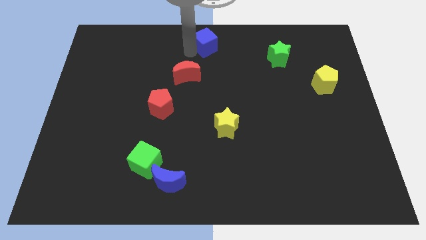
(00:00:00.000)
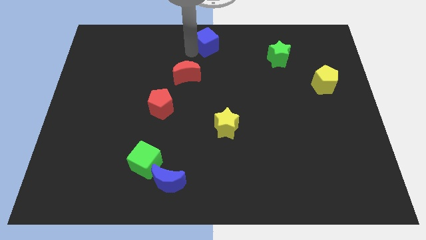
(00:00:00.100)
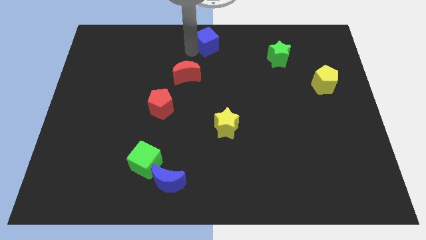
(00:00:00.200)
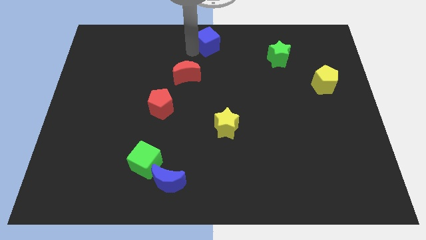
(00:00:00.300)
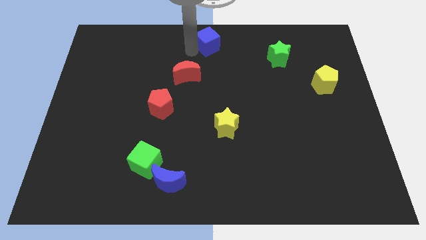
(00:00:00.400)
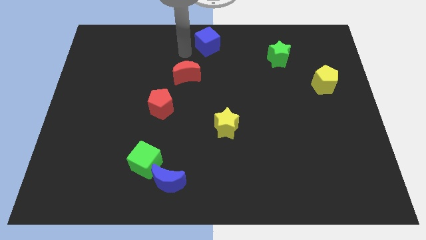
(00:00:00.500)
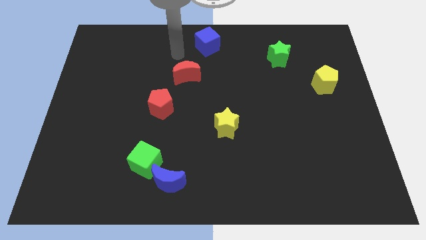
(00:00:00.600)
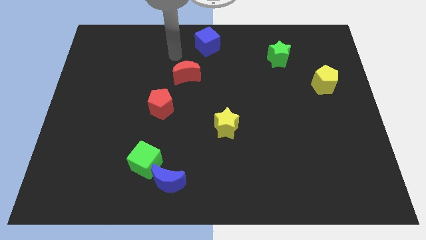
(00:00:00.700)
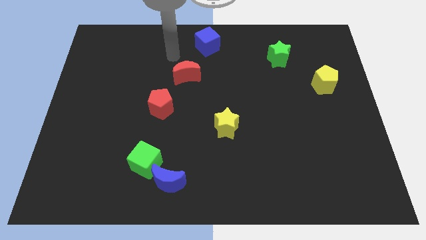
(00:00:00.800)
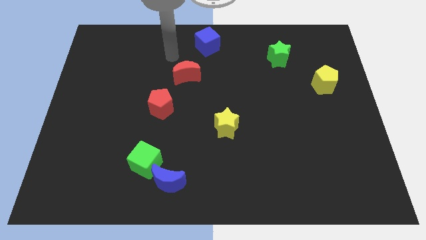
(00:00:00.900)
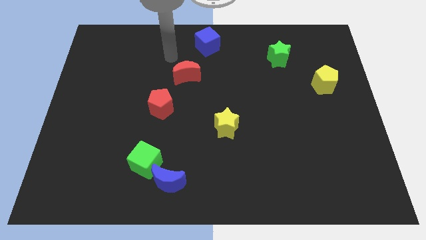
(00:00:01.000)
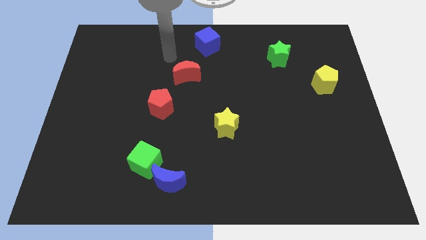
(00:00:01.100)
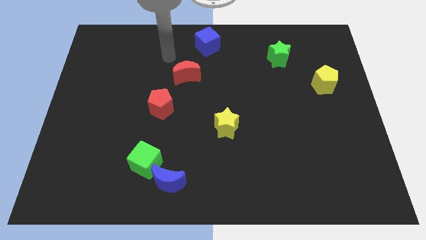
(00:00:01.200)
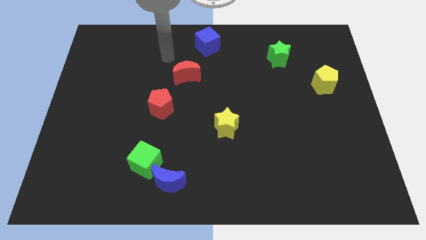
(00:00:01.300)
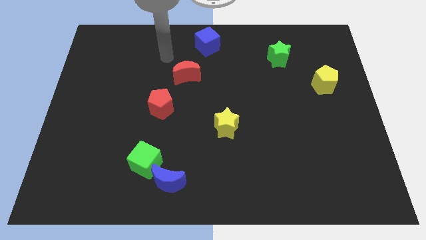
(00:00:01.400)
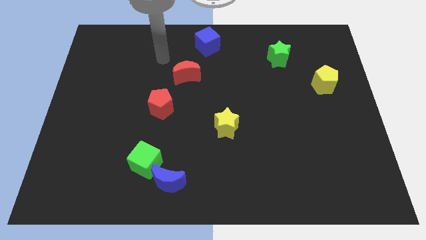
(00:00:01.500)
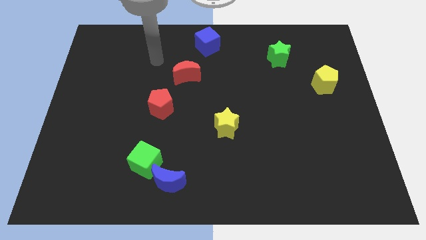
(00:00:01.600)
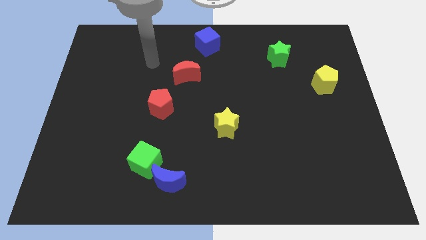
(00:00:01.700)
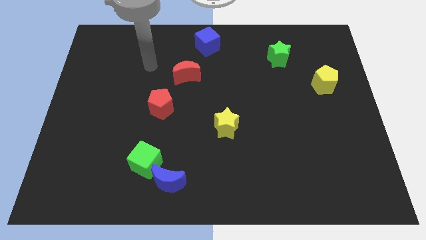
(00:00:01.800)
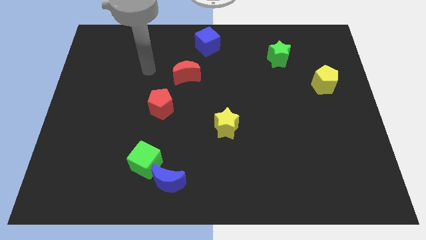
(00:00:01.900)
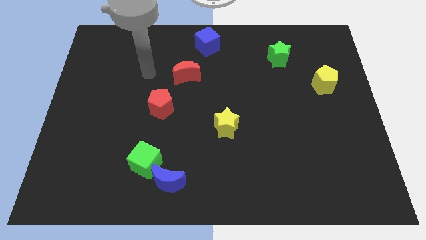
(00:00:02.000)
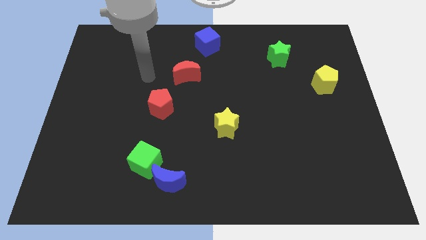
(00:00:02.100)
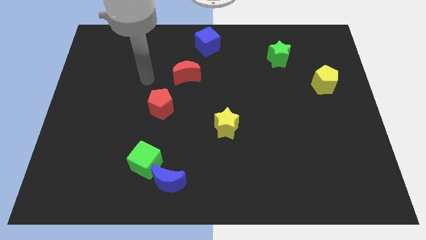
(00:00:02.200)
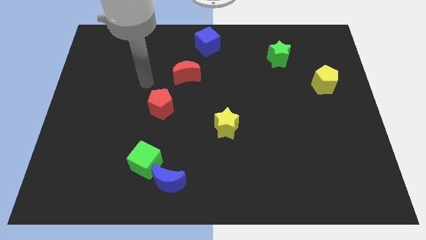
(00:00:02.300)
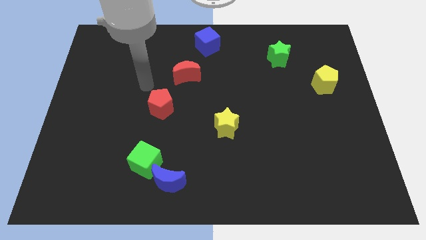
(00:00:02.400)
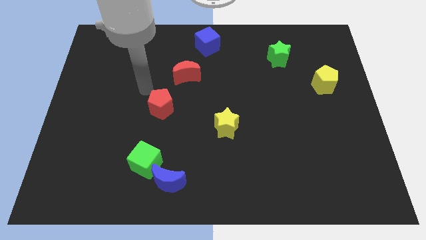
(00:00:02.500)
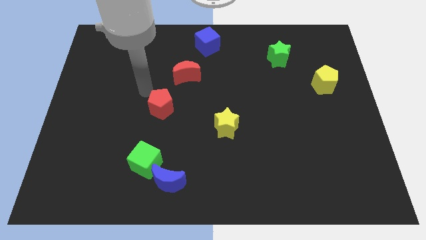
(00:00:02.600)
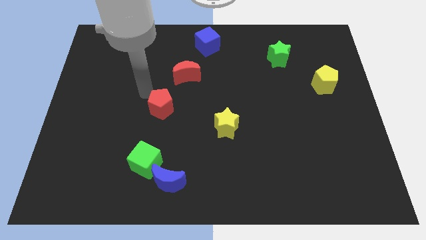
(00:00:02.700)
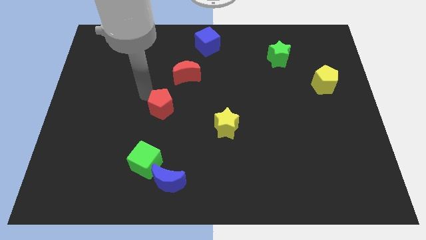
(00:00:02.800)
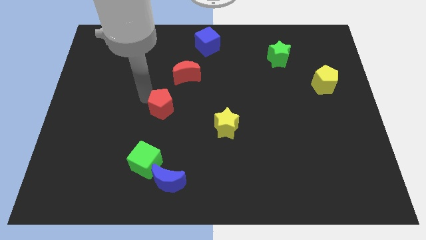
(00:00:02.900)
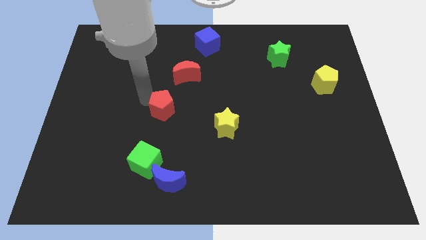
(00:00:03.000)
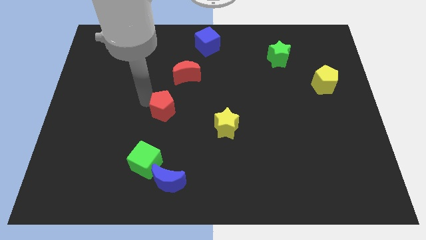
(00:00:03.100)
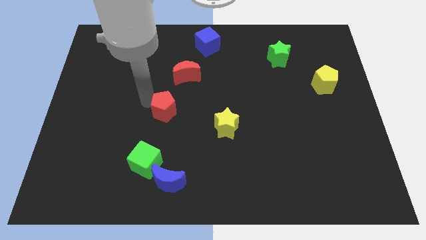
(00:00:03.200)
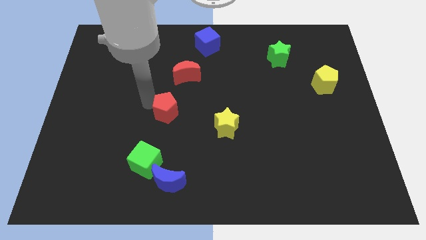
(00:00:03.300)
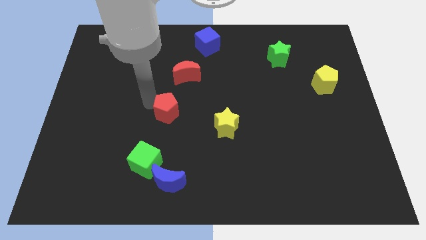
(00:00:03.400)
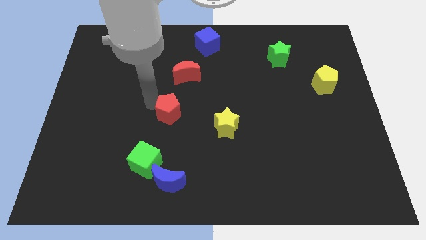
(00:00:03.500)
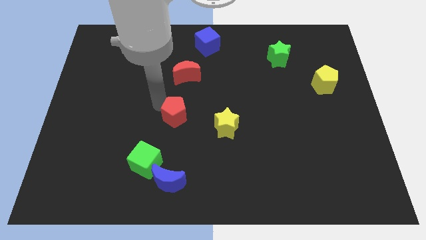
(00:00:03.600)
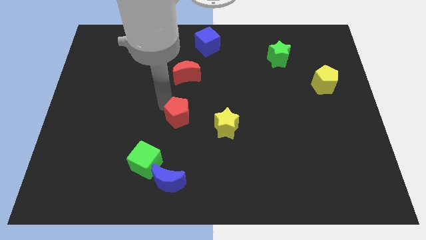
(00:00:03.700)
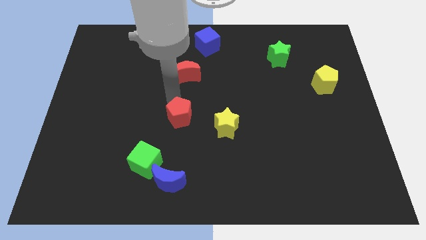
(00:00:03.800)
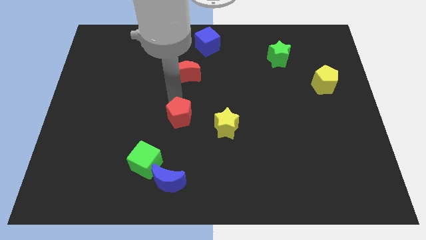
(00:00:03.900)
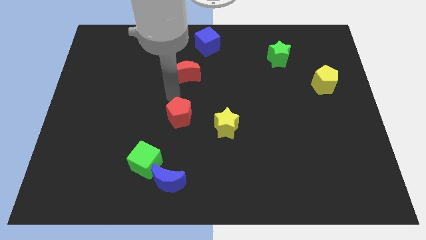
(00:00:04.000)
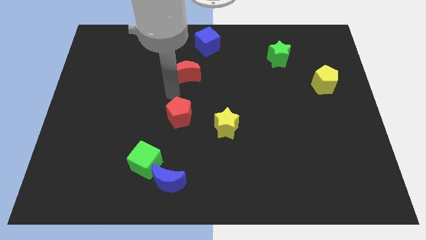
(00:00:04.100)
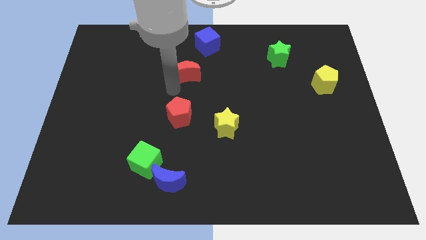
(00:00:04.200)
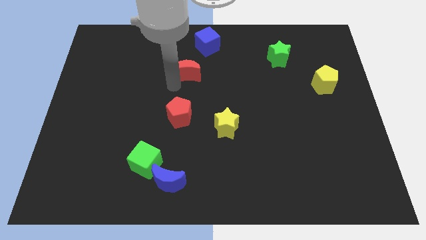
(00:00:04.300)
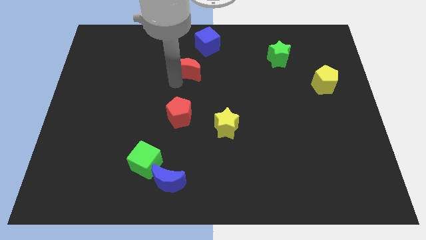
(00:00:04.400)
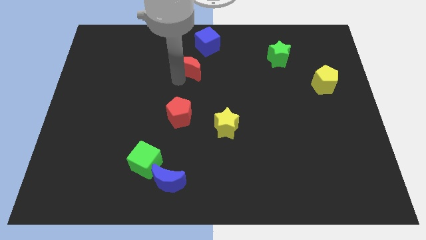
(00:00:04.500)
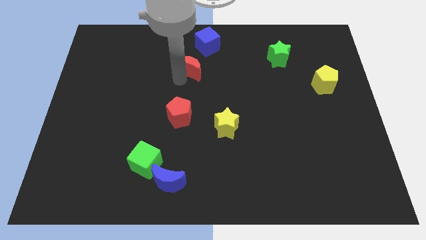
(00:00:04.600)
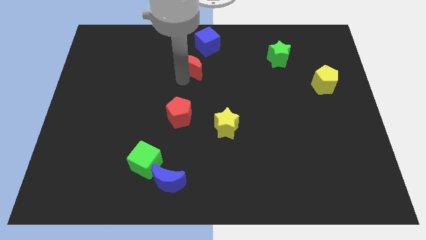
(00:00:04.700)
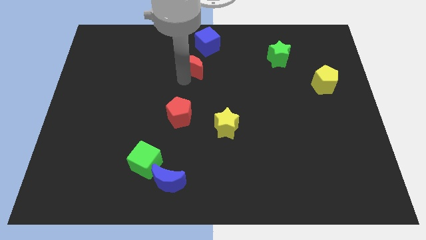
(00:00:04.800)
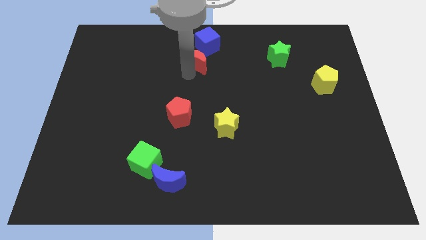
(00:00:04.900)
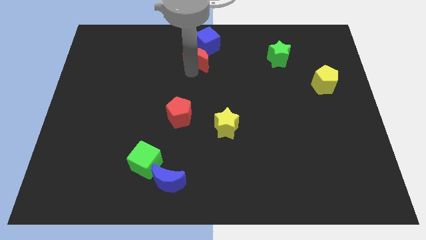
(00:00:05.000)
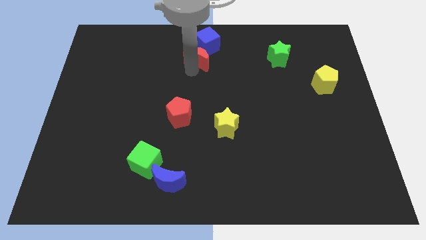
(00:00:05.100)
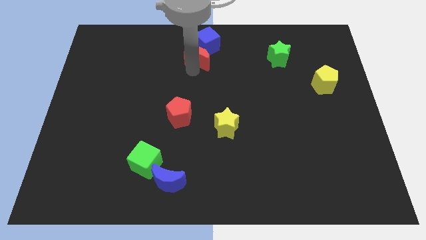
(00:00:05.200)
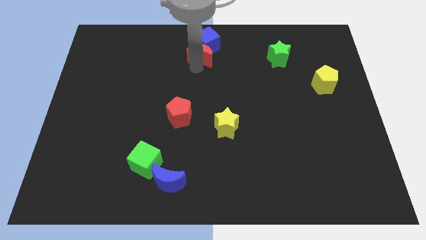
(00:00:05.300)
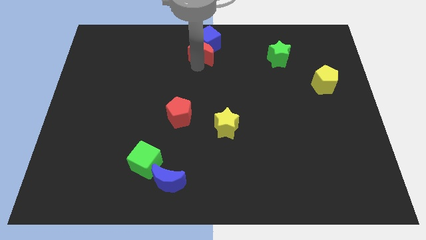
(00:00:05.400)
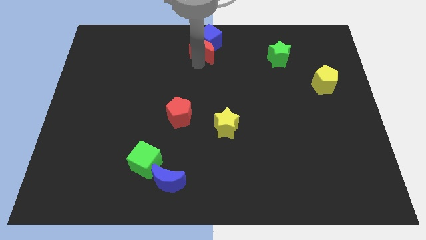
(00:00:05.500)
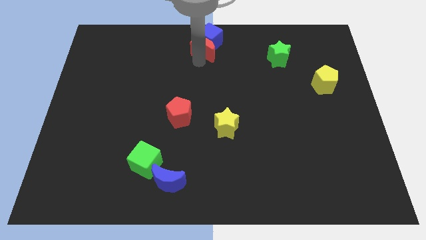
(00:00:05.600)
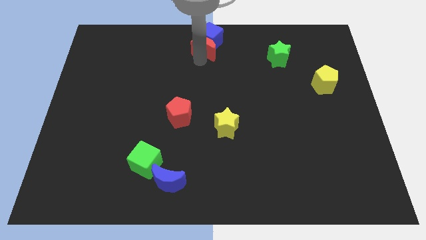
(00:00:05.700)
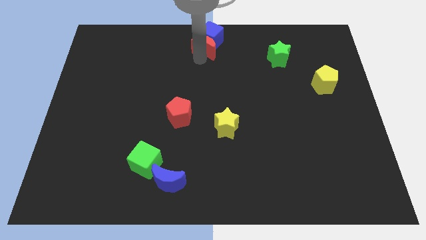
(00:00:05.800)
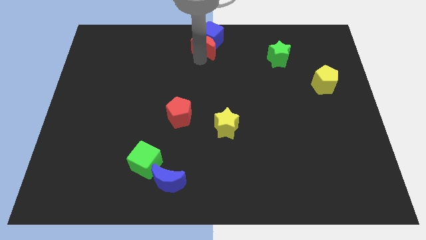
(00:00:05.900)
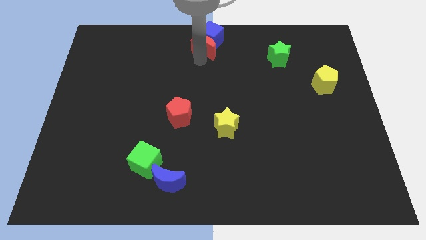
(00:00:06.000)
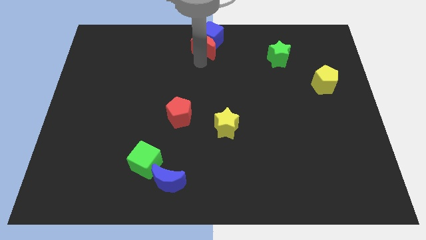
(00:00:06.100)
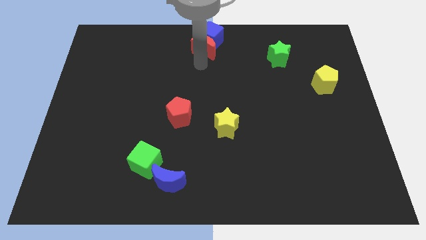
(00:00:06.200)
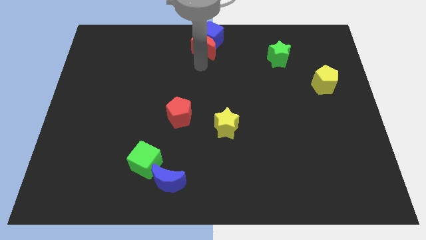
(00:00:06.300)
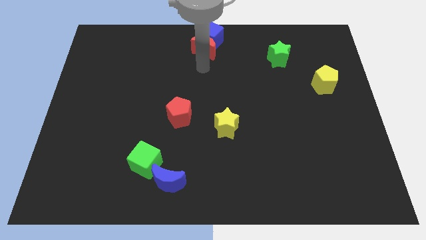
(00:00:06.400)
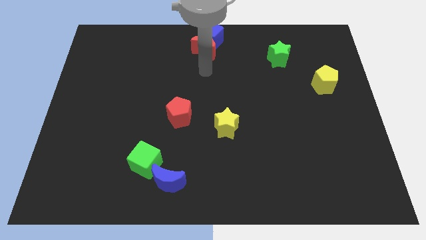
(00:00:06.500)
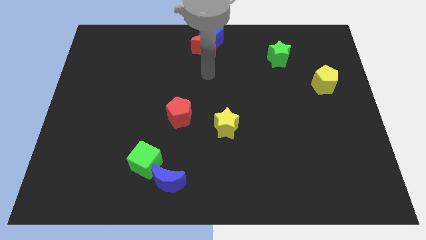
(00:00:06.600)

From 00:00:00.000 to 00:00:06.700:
push the red crescent into the blue cube

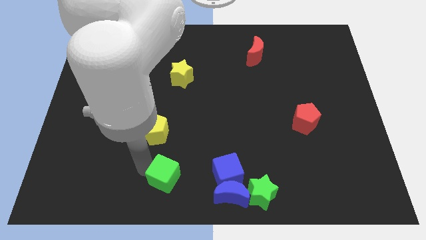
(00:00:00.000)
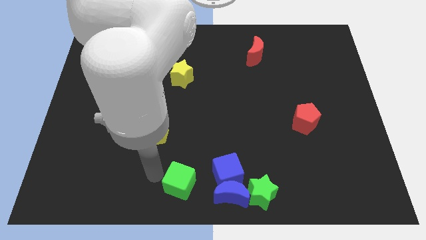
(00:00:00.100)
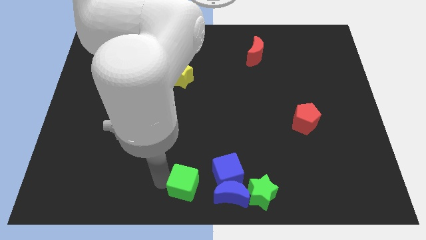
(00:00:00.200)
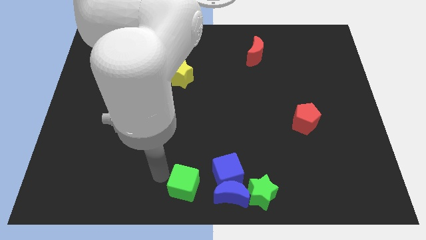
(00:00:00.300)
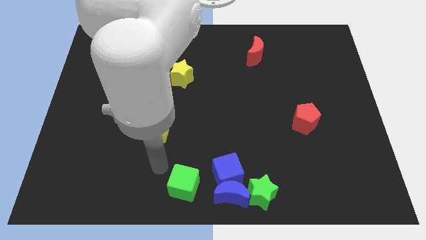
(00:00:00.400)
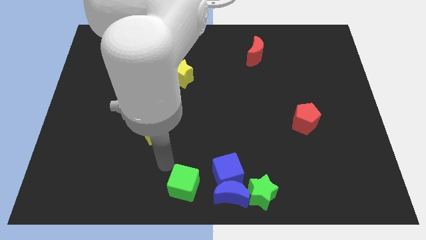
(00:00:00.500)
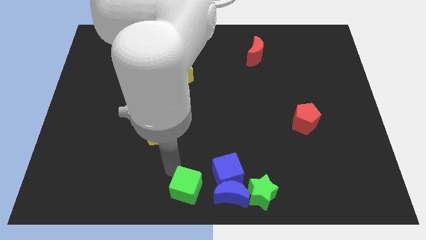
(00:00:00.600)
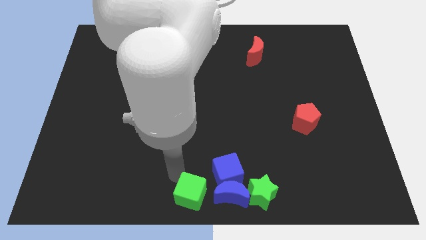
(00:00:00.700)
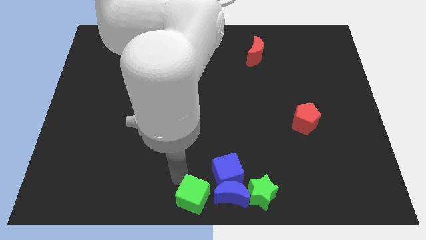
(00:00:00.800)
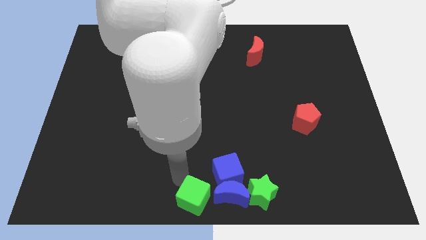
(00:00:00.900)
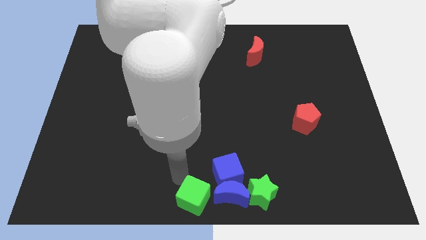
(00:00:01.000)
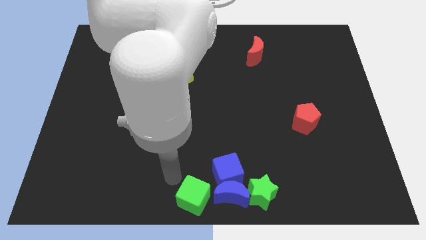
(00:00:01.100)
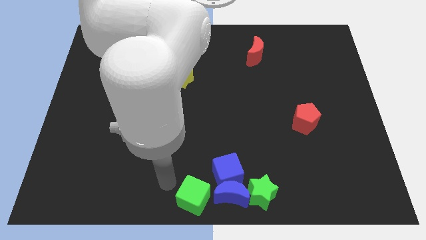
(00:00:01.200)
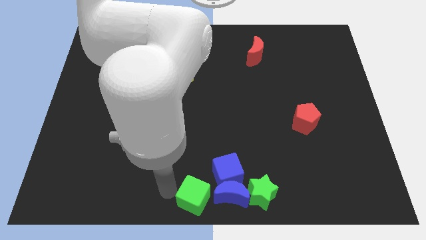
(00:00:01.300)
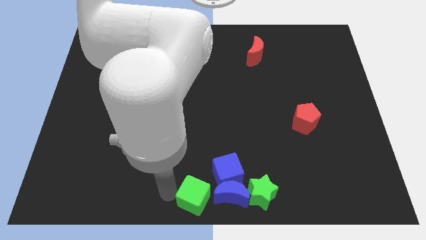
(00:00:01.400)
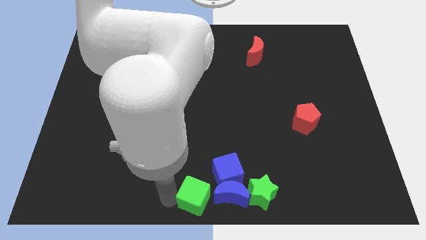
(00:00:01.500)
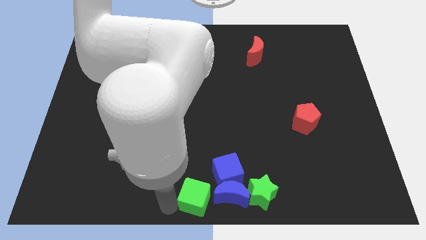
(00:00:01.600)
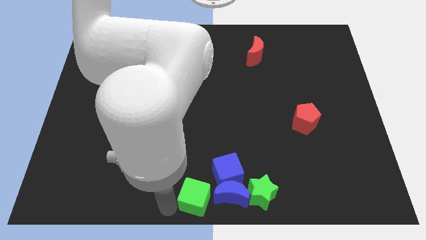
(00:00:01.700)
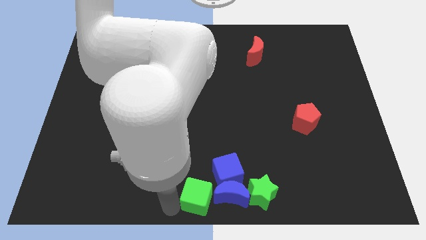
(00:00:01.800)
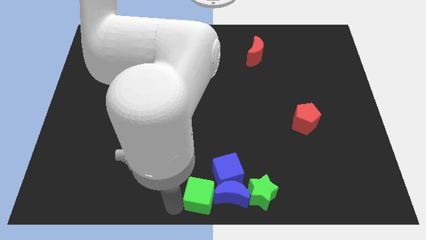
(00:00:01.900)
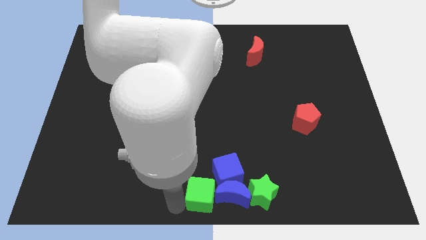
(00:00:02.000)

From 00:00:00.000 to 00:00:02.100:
move the green cube left to the blue crescent
